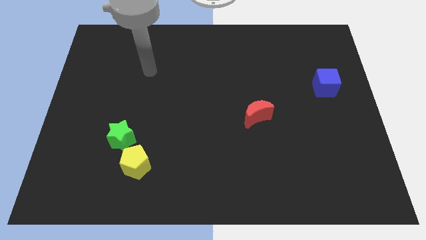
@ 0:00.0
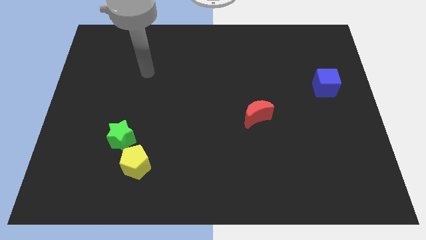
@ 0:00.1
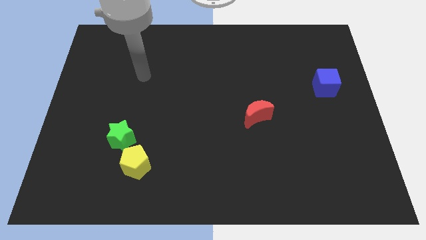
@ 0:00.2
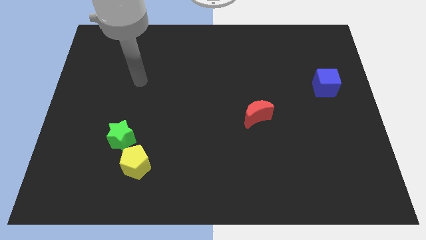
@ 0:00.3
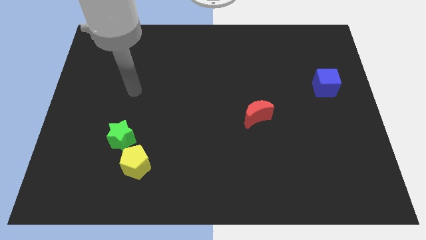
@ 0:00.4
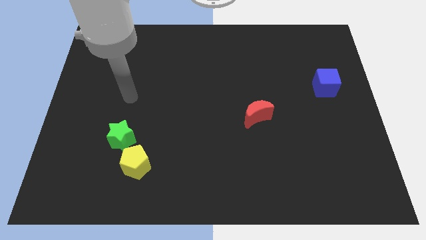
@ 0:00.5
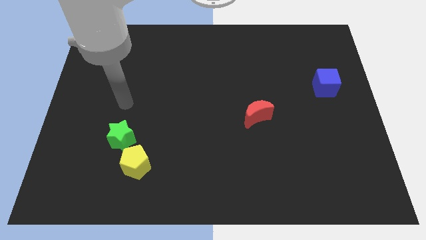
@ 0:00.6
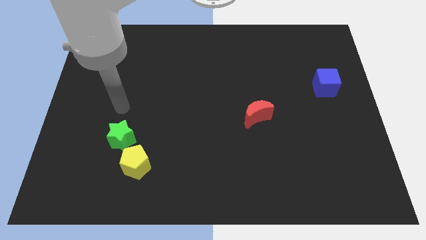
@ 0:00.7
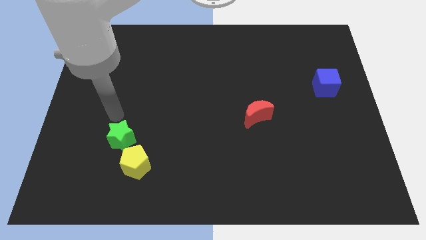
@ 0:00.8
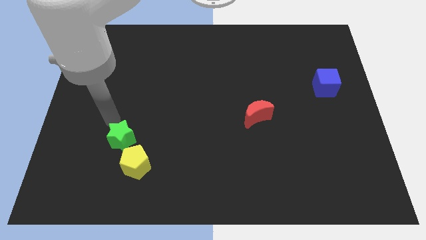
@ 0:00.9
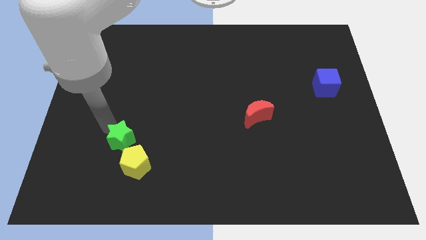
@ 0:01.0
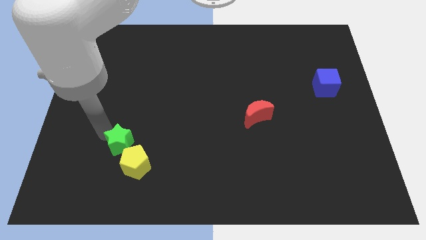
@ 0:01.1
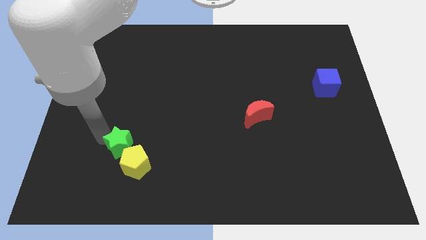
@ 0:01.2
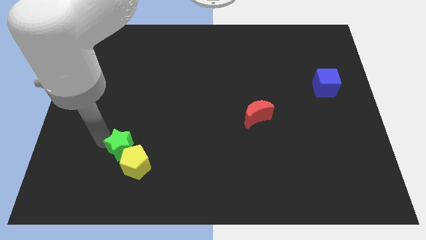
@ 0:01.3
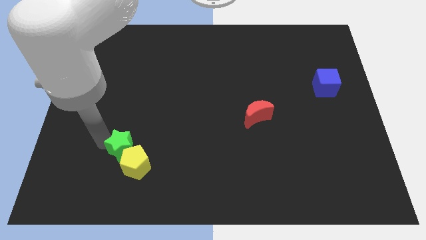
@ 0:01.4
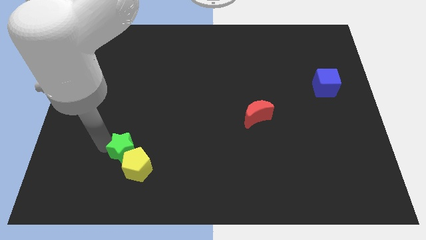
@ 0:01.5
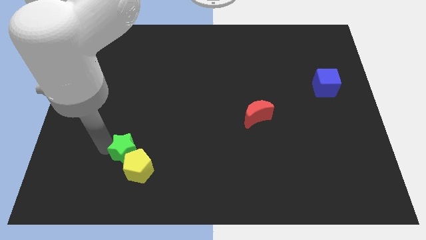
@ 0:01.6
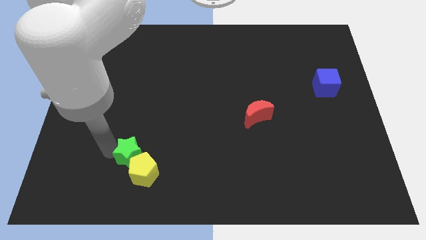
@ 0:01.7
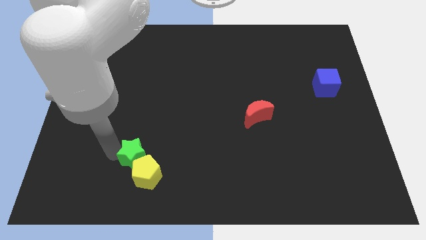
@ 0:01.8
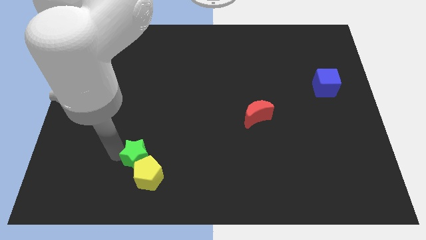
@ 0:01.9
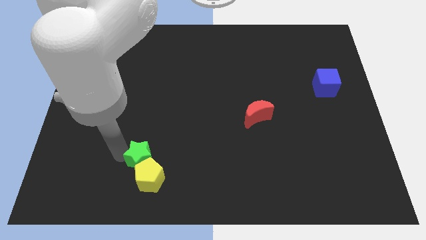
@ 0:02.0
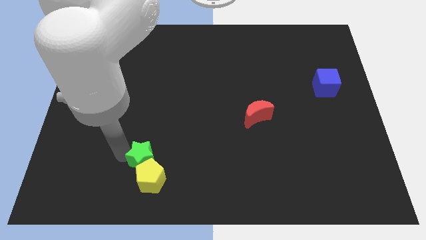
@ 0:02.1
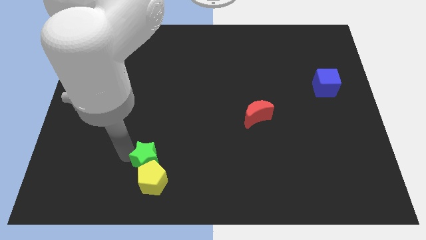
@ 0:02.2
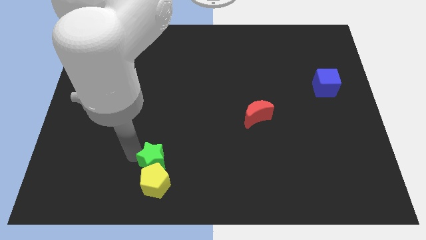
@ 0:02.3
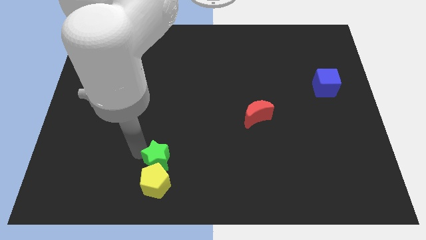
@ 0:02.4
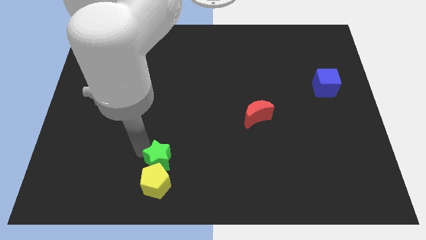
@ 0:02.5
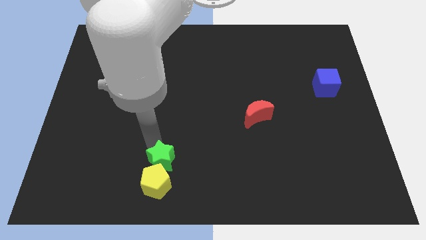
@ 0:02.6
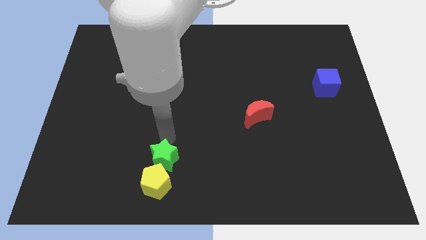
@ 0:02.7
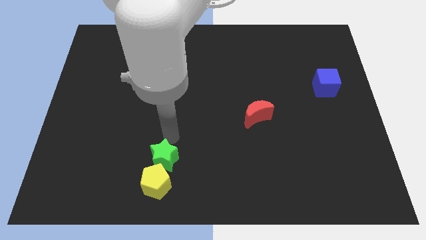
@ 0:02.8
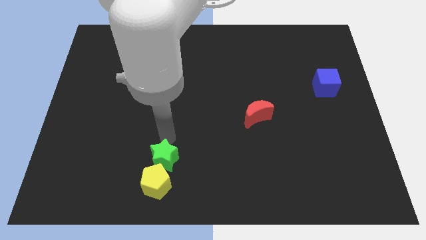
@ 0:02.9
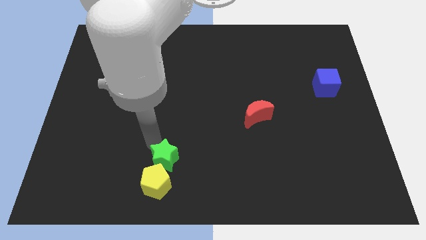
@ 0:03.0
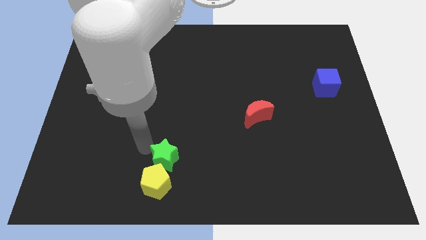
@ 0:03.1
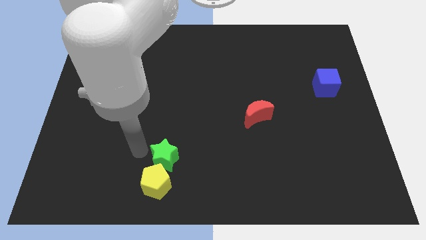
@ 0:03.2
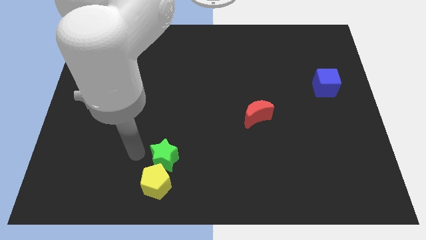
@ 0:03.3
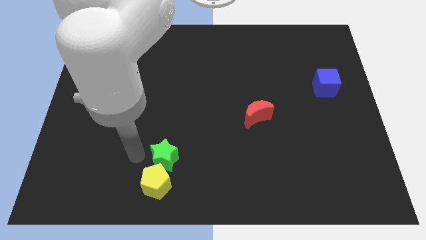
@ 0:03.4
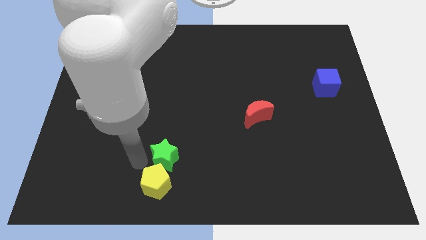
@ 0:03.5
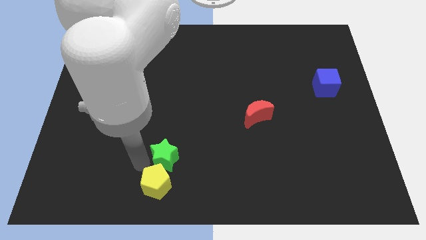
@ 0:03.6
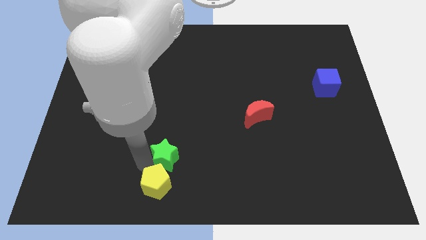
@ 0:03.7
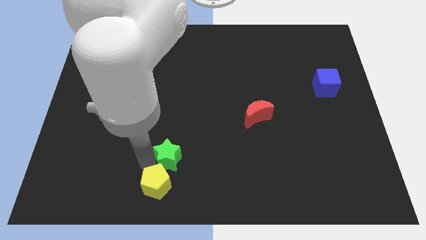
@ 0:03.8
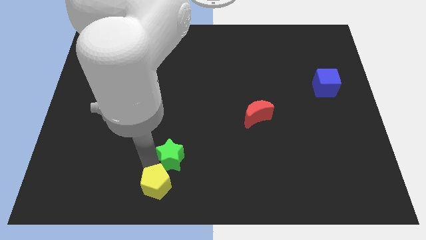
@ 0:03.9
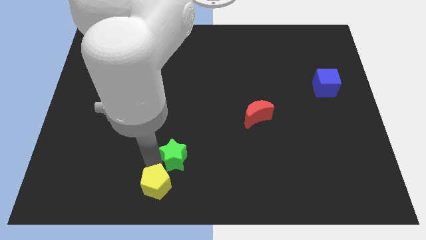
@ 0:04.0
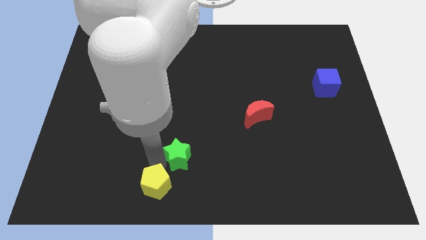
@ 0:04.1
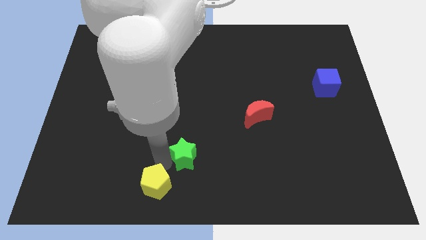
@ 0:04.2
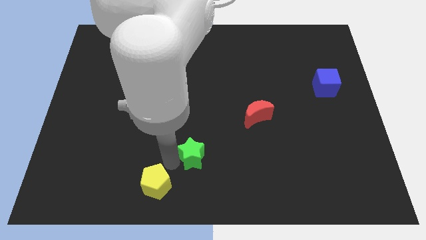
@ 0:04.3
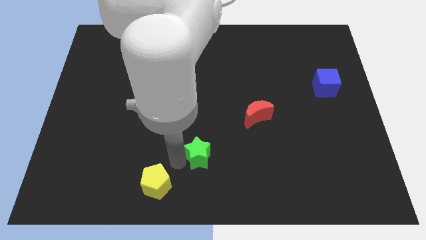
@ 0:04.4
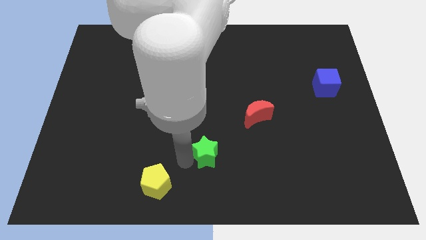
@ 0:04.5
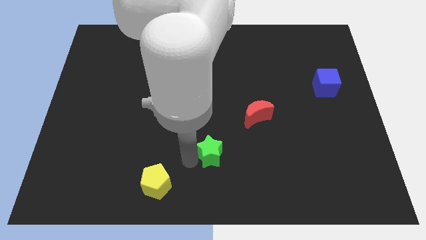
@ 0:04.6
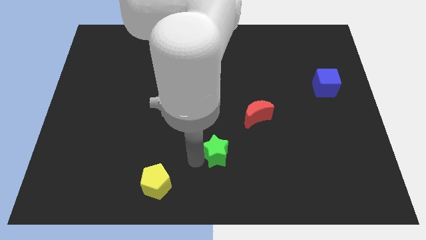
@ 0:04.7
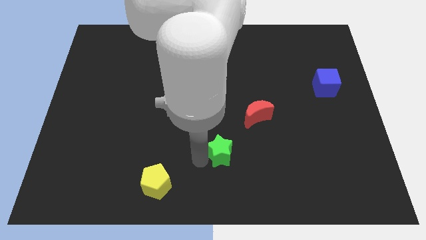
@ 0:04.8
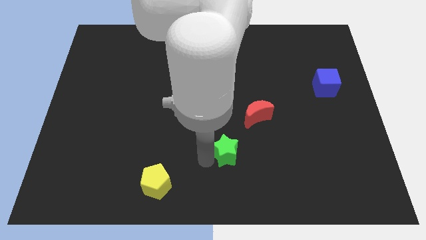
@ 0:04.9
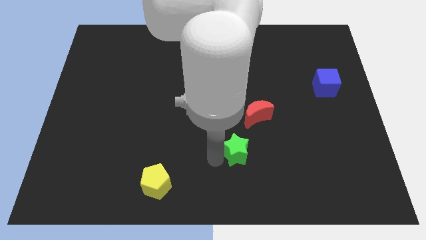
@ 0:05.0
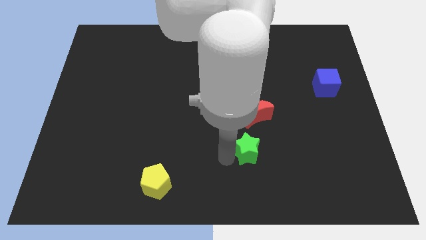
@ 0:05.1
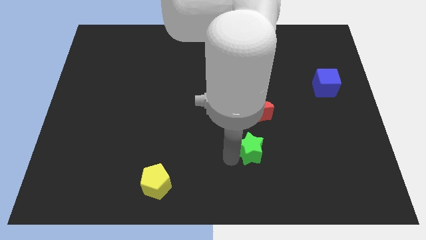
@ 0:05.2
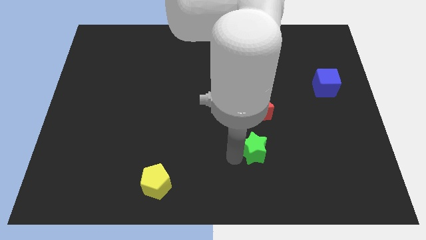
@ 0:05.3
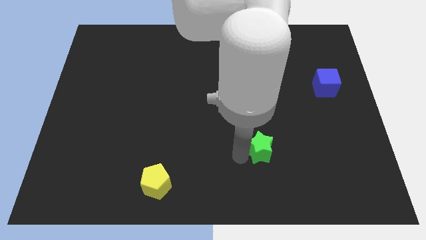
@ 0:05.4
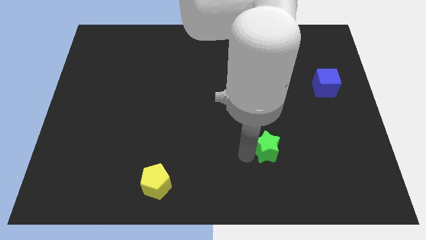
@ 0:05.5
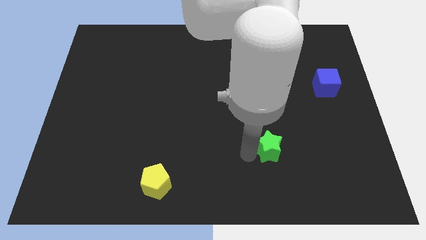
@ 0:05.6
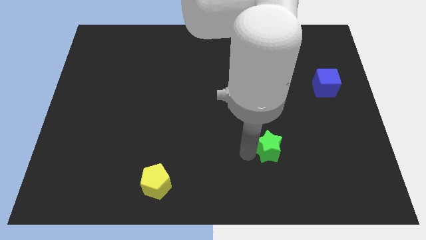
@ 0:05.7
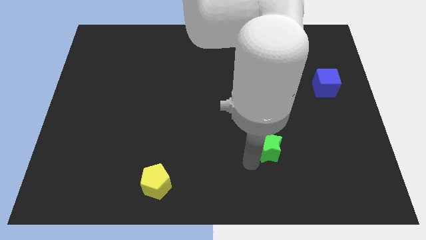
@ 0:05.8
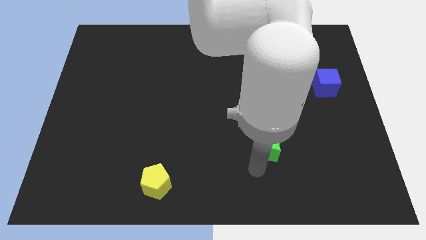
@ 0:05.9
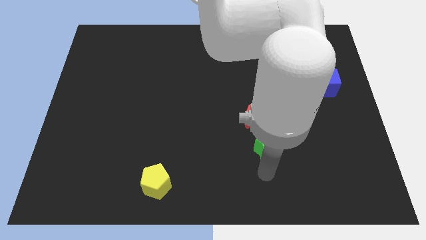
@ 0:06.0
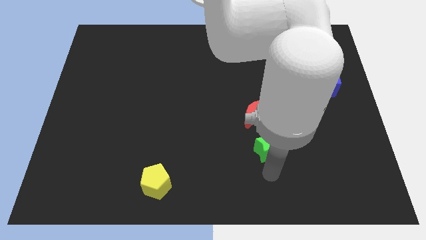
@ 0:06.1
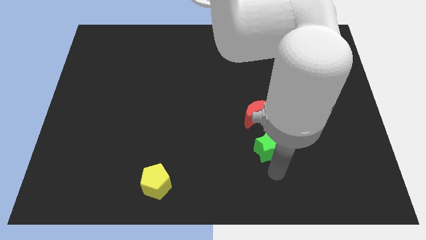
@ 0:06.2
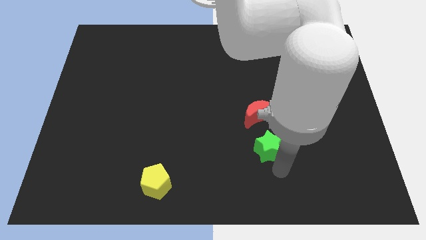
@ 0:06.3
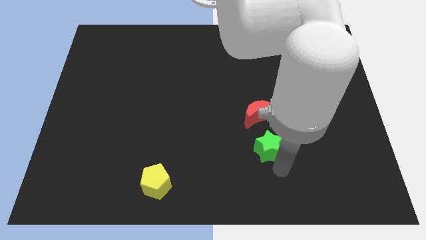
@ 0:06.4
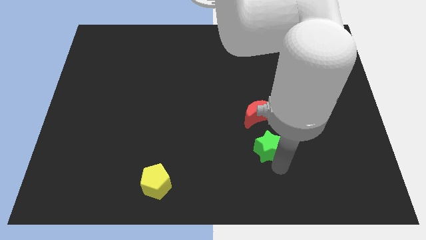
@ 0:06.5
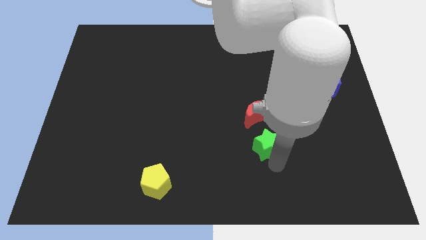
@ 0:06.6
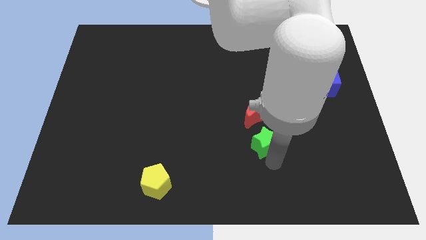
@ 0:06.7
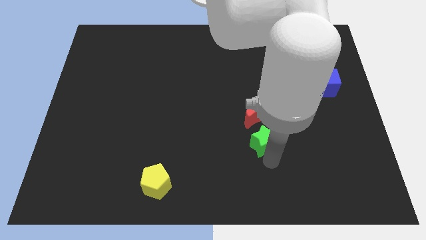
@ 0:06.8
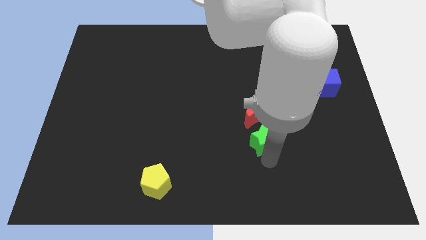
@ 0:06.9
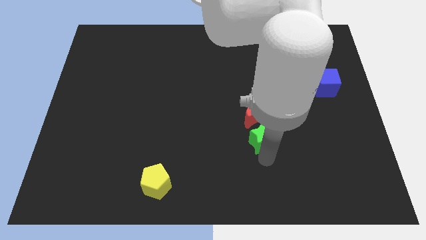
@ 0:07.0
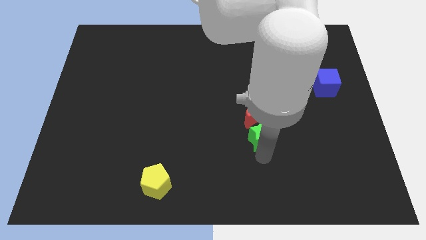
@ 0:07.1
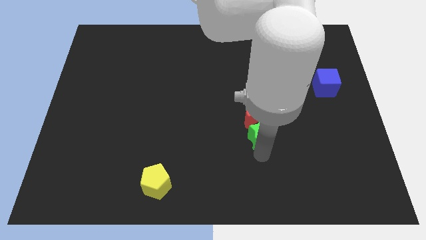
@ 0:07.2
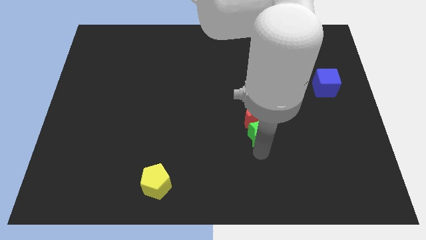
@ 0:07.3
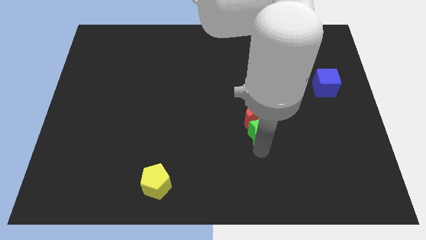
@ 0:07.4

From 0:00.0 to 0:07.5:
move the star towards the red moon

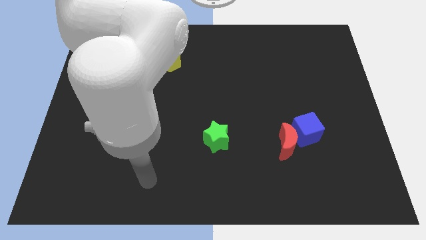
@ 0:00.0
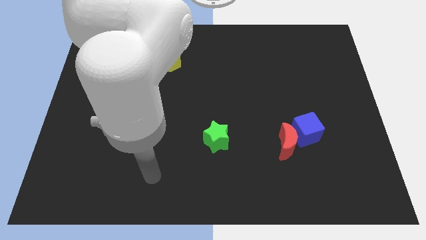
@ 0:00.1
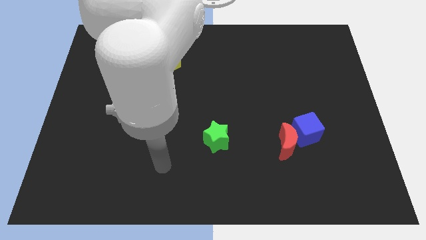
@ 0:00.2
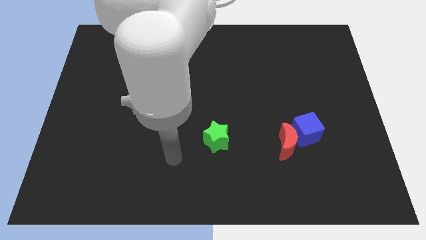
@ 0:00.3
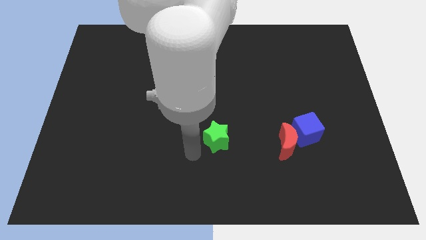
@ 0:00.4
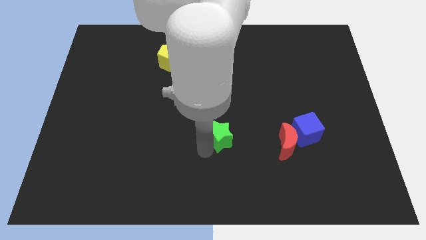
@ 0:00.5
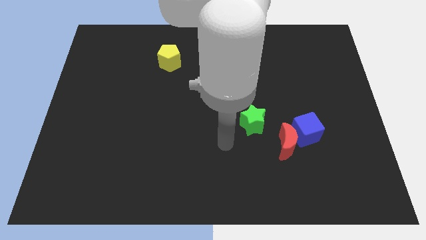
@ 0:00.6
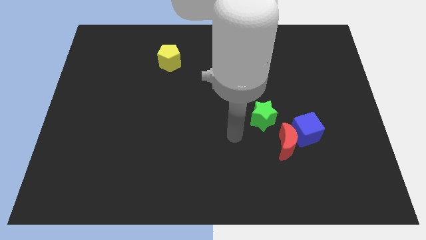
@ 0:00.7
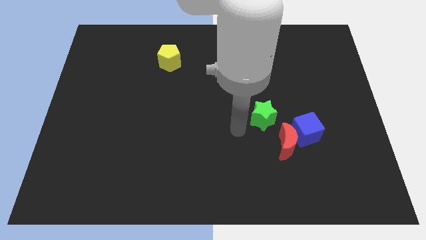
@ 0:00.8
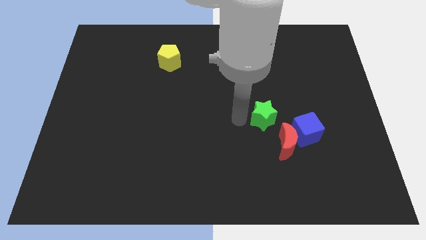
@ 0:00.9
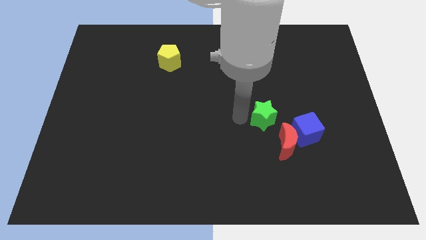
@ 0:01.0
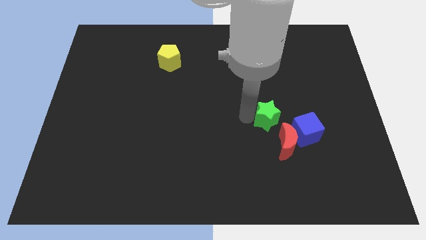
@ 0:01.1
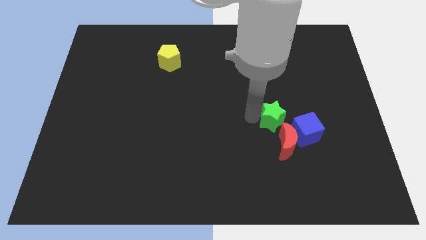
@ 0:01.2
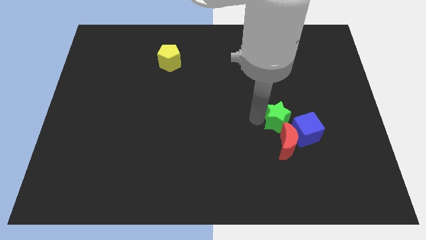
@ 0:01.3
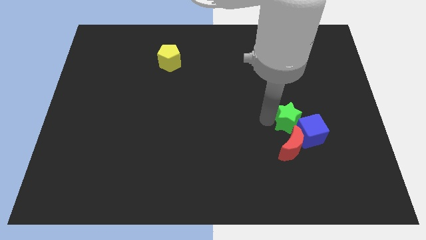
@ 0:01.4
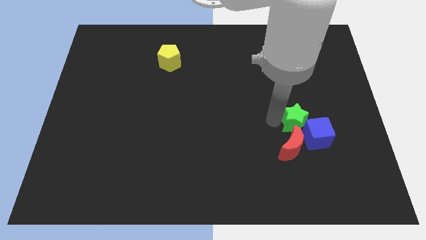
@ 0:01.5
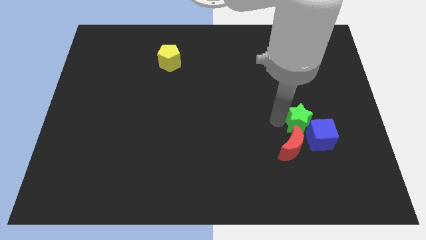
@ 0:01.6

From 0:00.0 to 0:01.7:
slide the green block towards the cube
